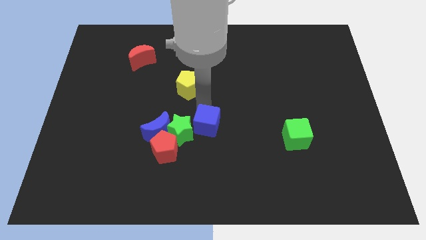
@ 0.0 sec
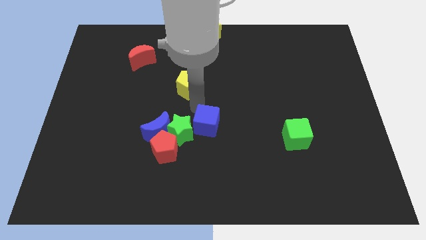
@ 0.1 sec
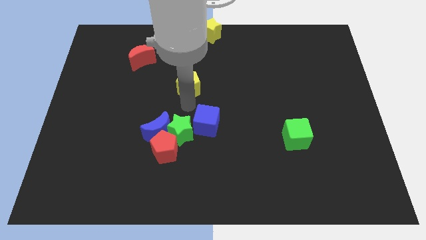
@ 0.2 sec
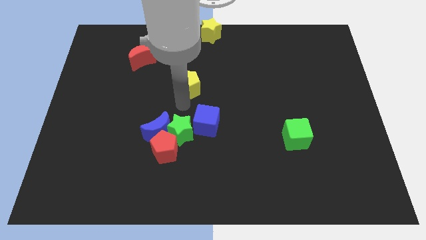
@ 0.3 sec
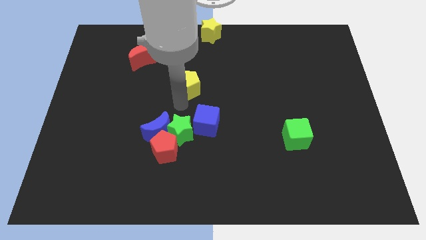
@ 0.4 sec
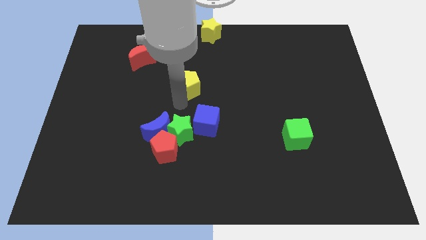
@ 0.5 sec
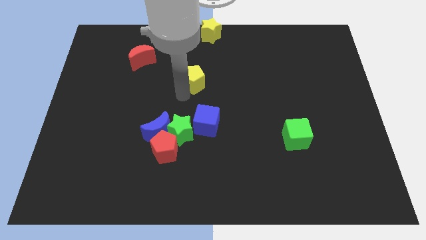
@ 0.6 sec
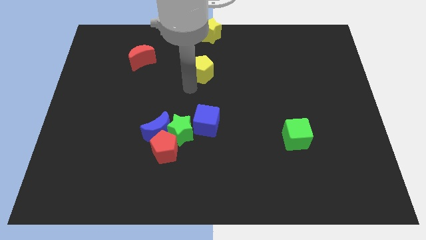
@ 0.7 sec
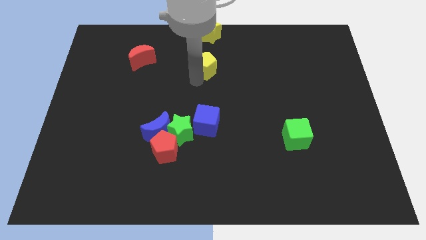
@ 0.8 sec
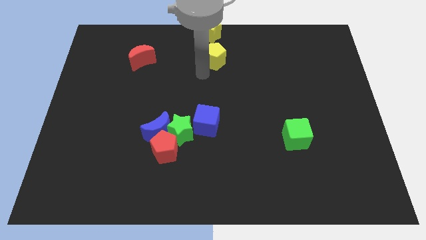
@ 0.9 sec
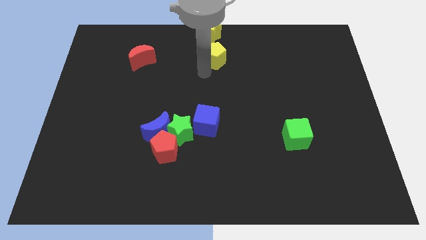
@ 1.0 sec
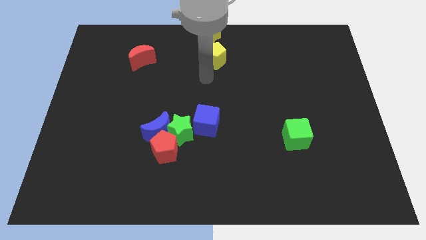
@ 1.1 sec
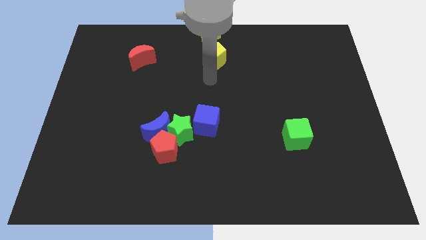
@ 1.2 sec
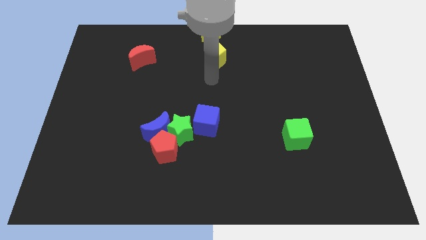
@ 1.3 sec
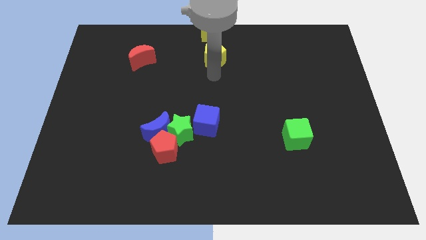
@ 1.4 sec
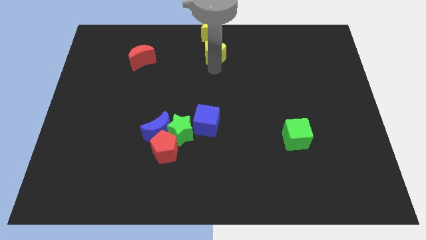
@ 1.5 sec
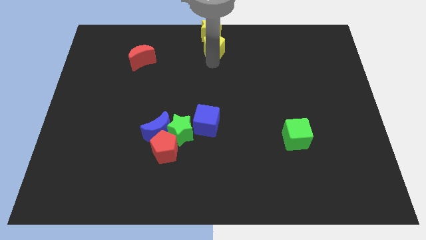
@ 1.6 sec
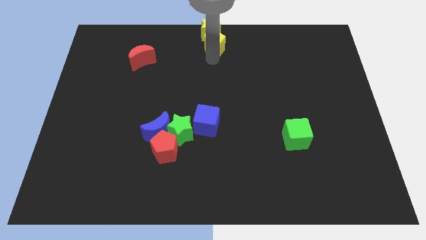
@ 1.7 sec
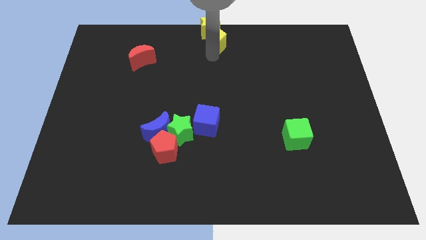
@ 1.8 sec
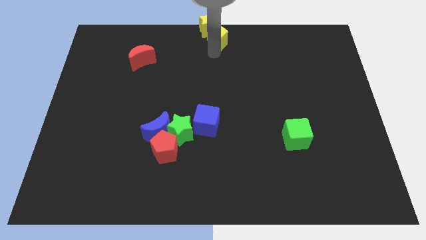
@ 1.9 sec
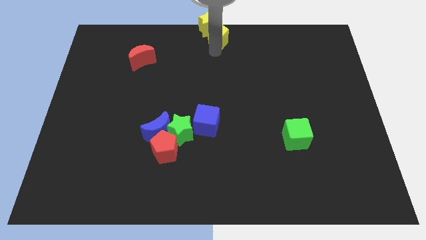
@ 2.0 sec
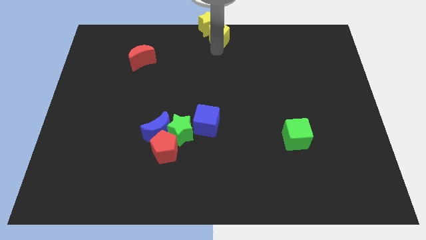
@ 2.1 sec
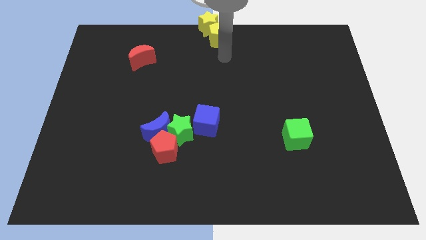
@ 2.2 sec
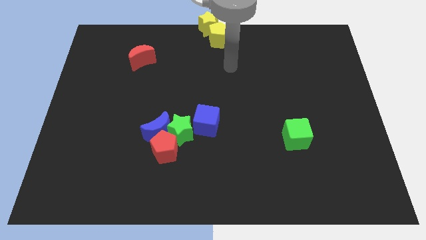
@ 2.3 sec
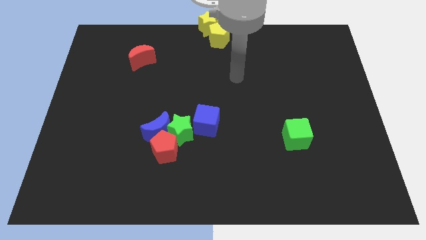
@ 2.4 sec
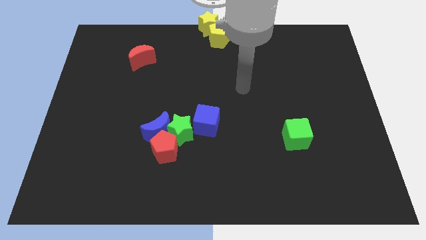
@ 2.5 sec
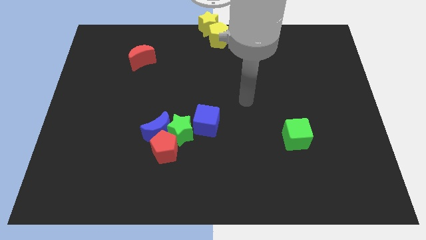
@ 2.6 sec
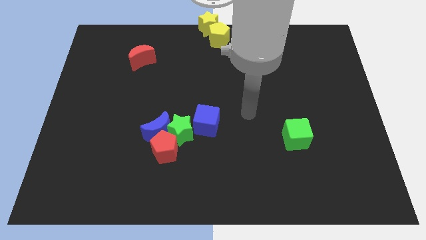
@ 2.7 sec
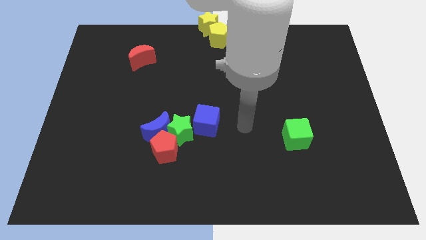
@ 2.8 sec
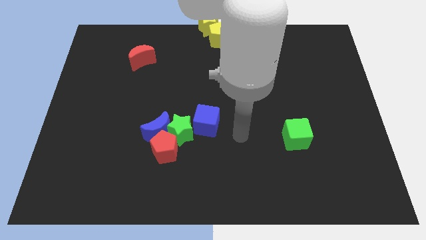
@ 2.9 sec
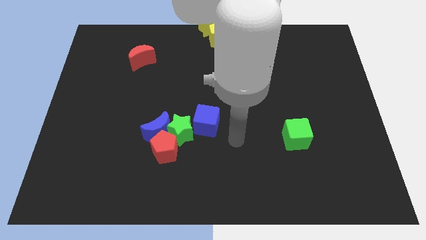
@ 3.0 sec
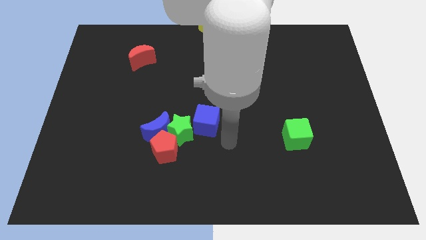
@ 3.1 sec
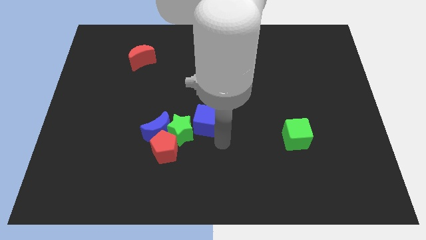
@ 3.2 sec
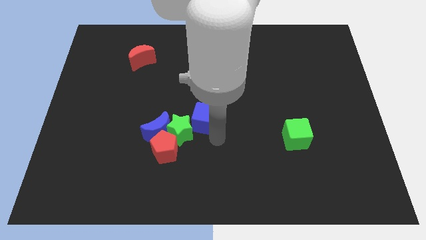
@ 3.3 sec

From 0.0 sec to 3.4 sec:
place yellow pentagon close to yellow star

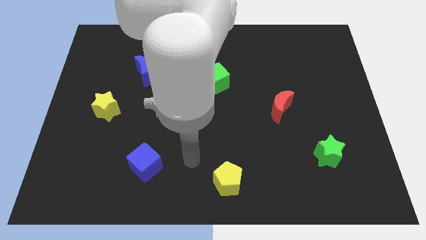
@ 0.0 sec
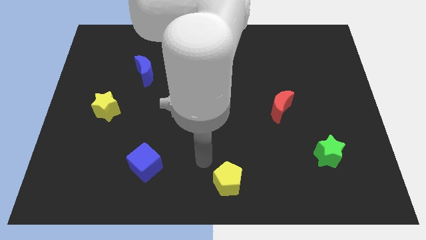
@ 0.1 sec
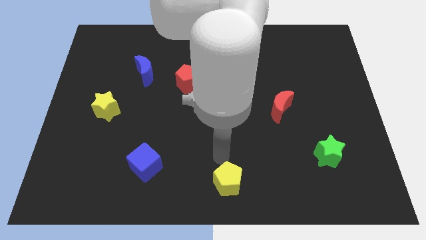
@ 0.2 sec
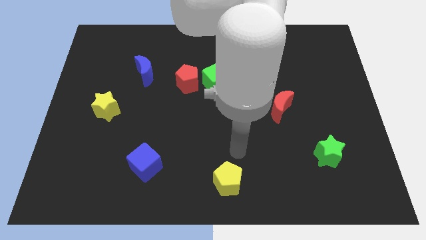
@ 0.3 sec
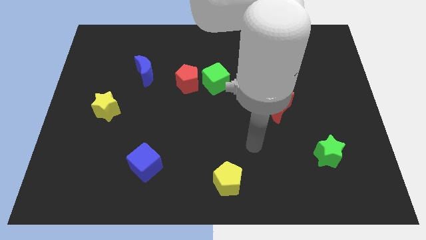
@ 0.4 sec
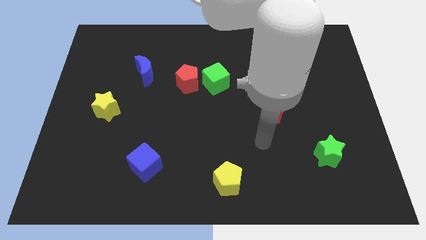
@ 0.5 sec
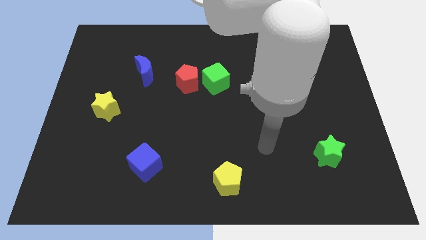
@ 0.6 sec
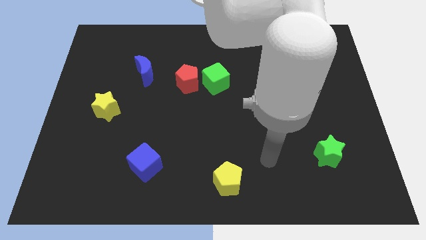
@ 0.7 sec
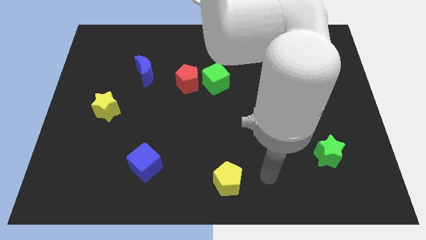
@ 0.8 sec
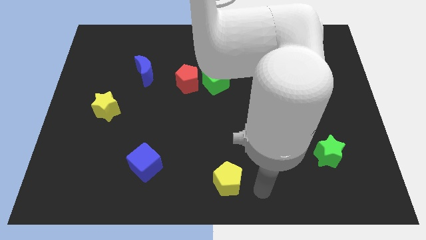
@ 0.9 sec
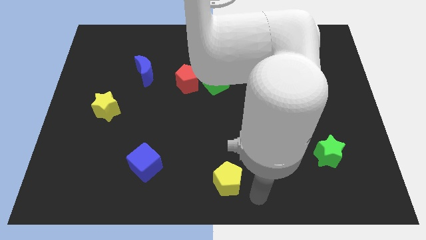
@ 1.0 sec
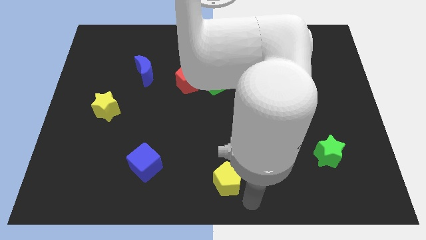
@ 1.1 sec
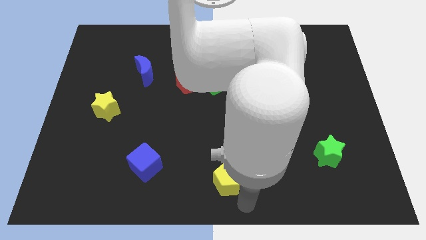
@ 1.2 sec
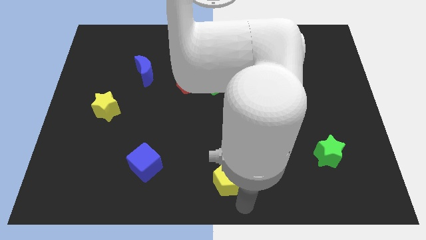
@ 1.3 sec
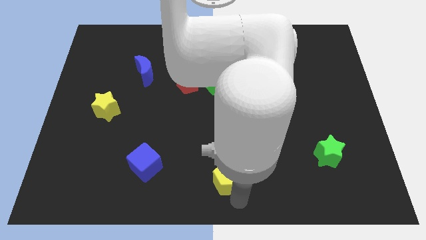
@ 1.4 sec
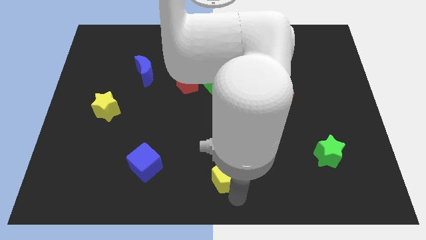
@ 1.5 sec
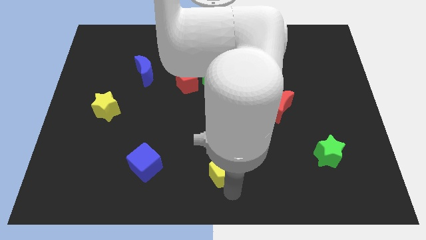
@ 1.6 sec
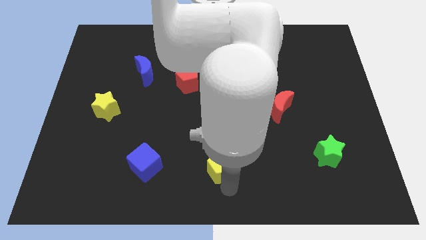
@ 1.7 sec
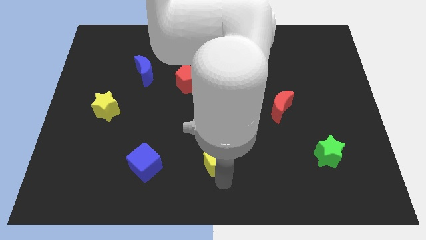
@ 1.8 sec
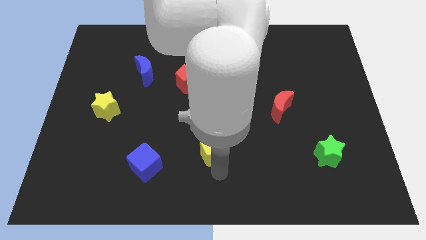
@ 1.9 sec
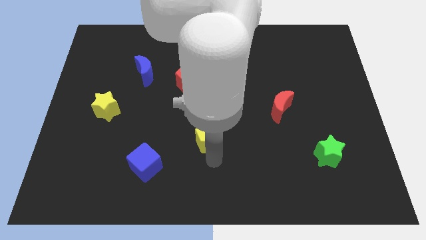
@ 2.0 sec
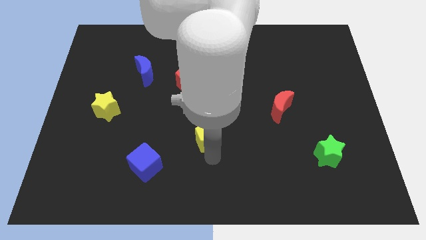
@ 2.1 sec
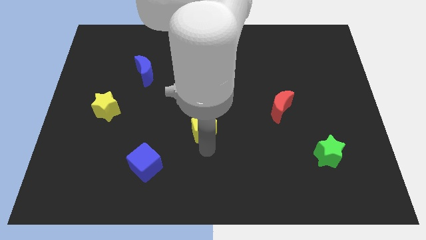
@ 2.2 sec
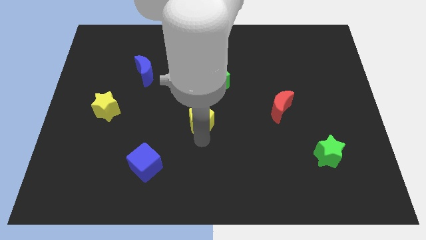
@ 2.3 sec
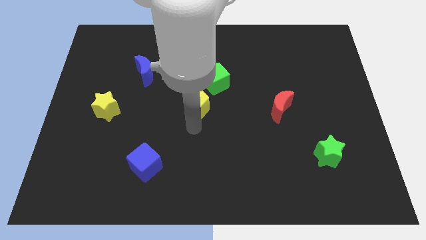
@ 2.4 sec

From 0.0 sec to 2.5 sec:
push the yellow pentagon to the top

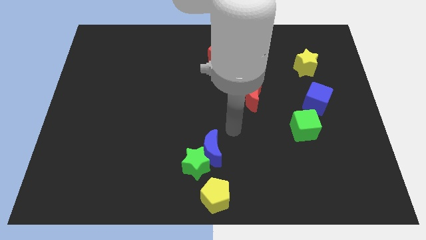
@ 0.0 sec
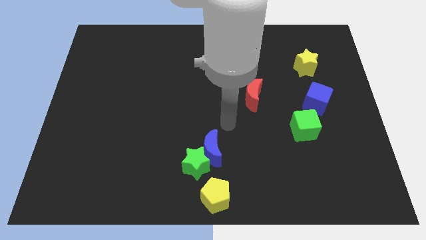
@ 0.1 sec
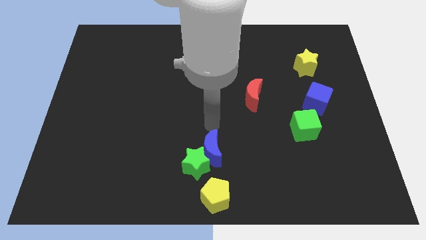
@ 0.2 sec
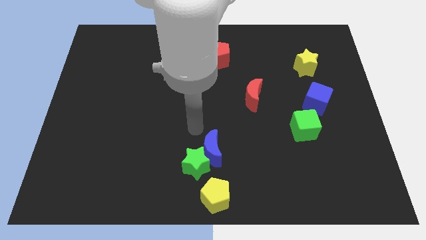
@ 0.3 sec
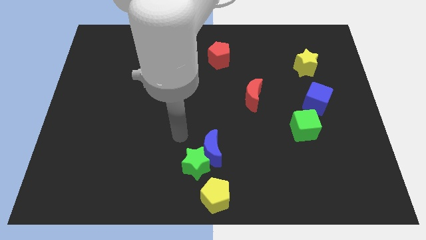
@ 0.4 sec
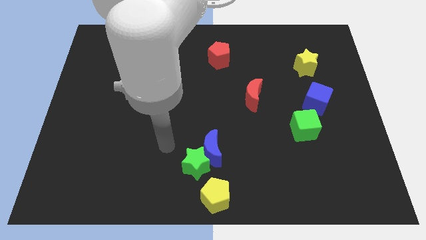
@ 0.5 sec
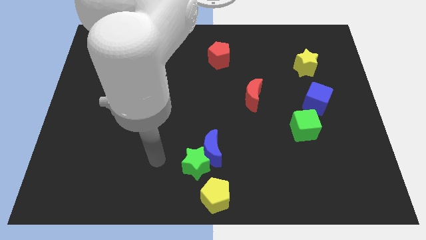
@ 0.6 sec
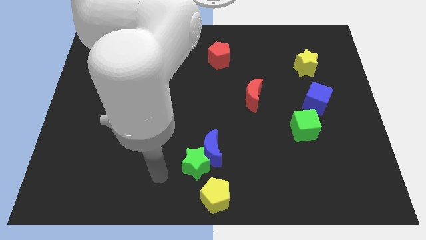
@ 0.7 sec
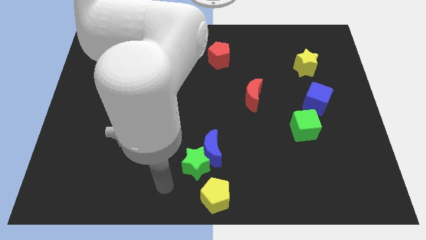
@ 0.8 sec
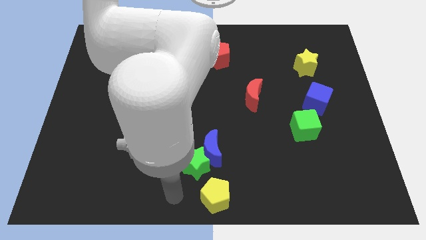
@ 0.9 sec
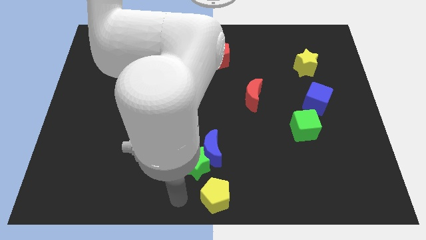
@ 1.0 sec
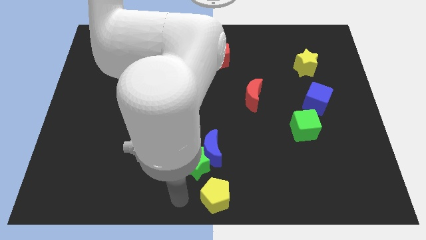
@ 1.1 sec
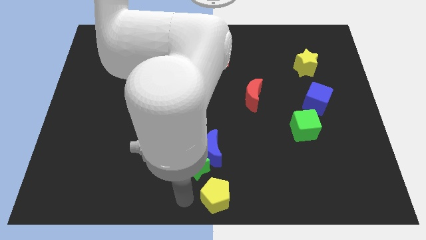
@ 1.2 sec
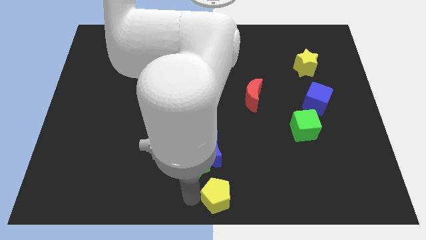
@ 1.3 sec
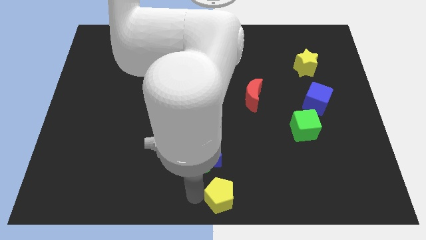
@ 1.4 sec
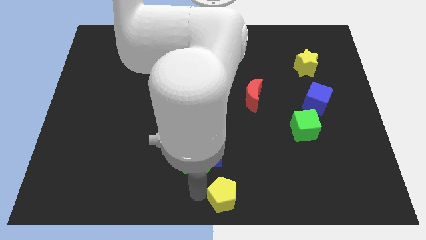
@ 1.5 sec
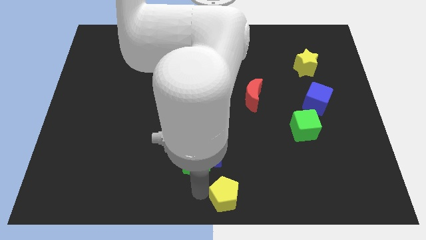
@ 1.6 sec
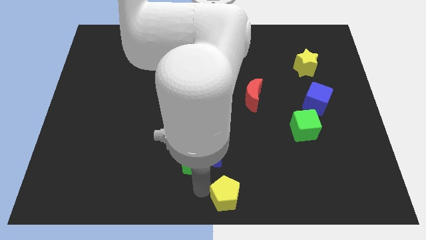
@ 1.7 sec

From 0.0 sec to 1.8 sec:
move your arm towards the yellow pentagon

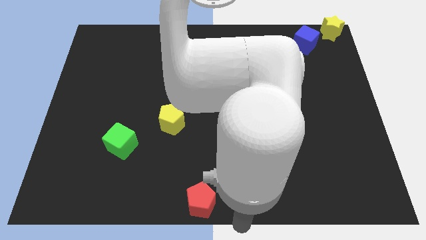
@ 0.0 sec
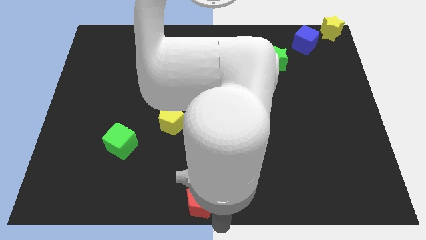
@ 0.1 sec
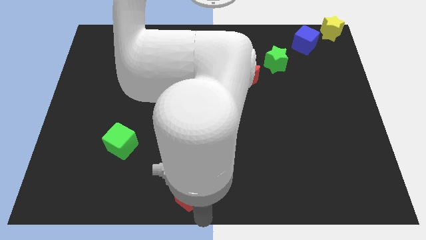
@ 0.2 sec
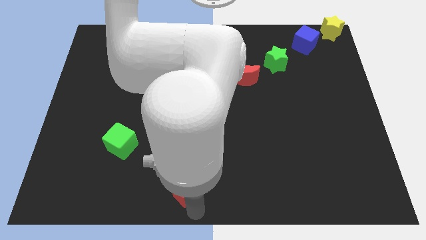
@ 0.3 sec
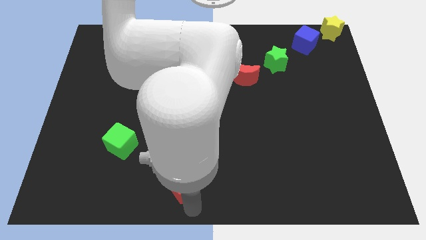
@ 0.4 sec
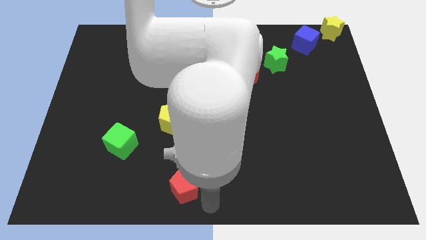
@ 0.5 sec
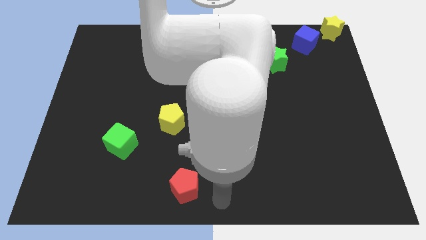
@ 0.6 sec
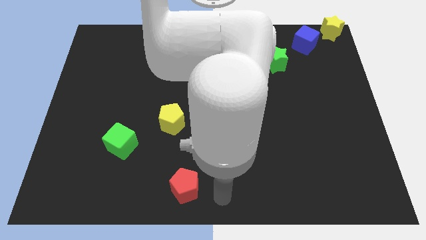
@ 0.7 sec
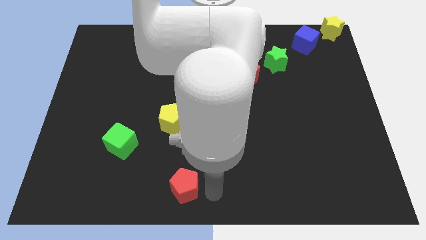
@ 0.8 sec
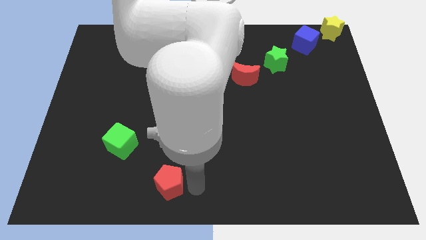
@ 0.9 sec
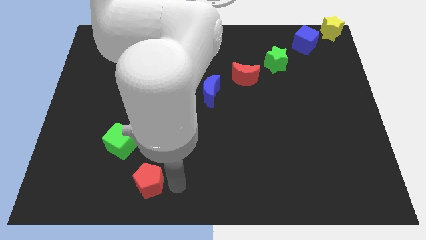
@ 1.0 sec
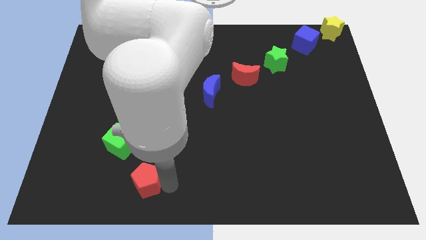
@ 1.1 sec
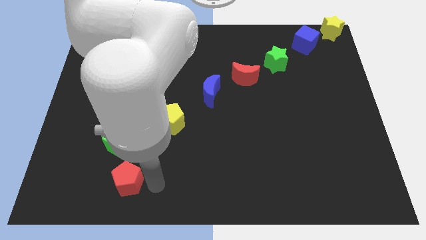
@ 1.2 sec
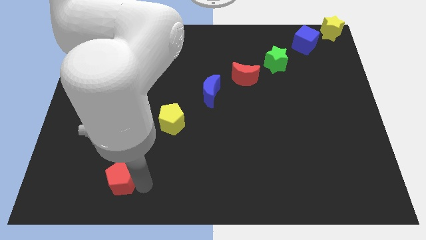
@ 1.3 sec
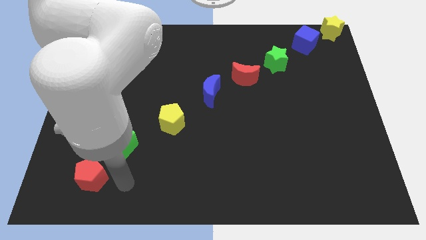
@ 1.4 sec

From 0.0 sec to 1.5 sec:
place the red pentagon below the green cube
